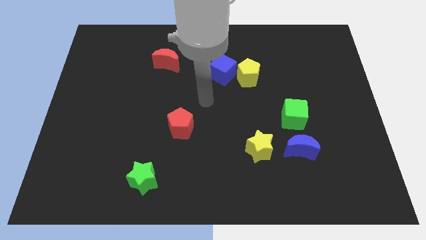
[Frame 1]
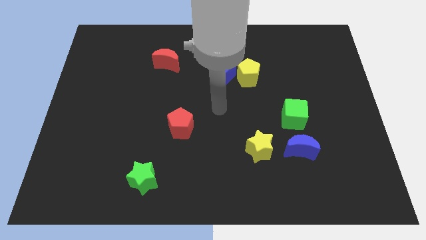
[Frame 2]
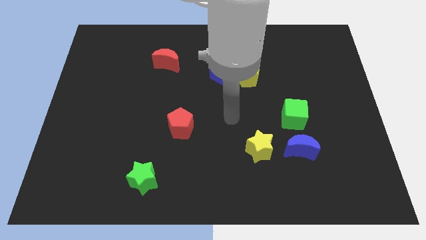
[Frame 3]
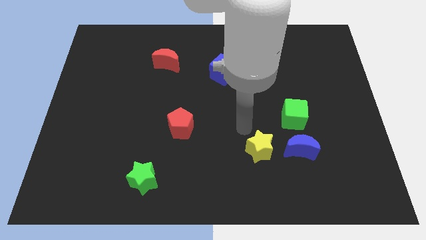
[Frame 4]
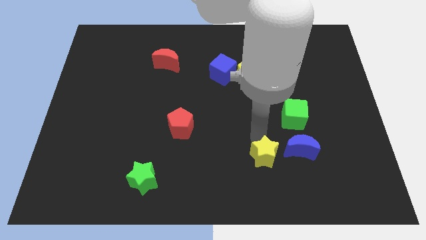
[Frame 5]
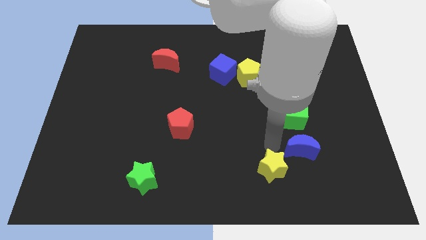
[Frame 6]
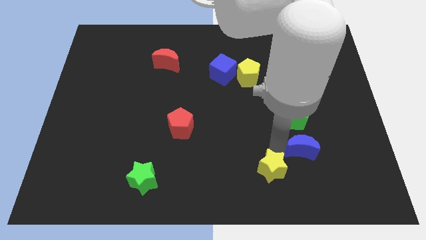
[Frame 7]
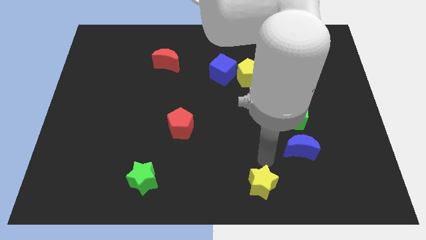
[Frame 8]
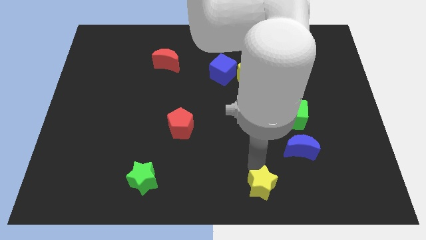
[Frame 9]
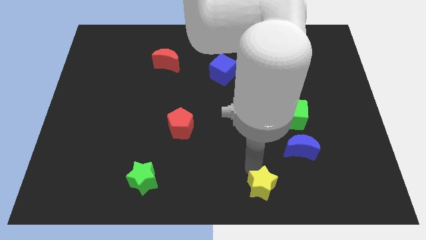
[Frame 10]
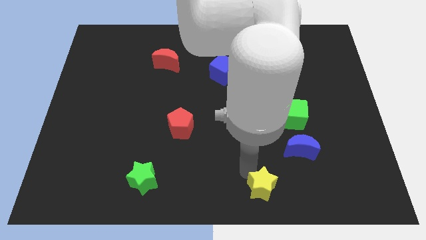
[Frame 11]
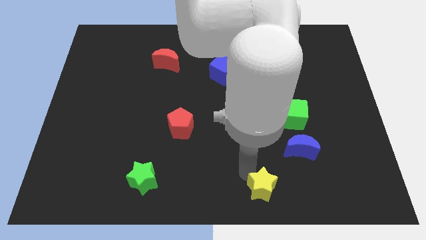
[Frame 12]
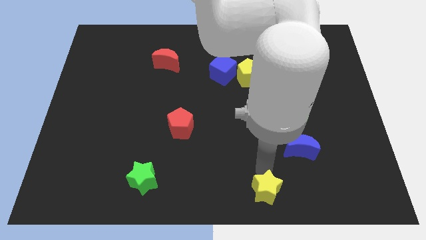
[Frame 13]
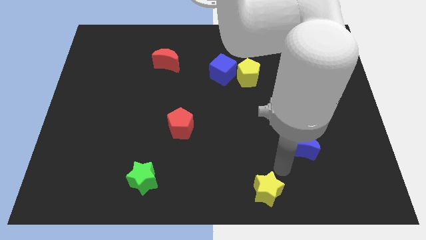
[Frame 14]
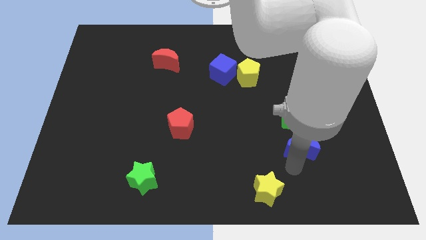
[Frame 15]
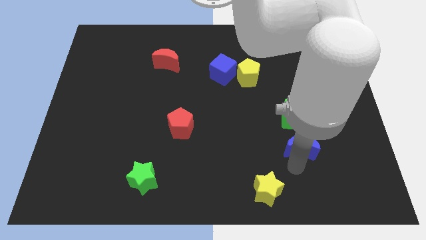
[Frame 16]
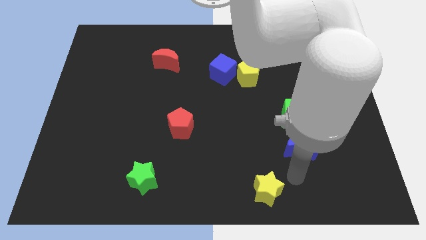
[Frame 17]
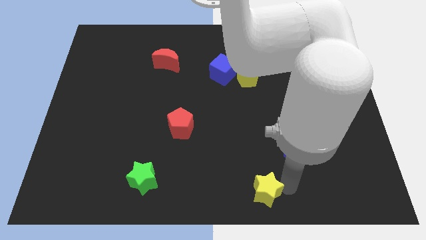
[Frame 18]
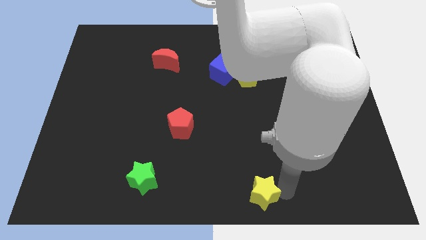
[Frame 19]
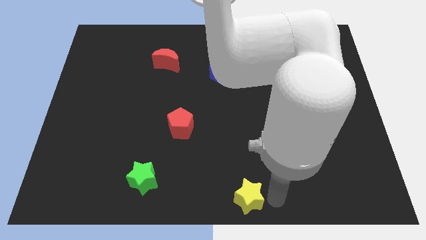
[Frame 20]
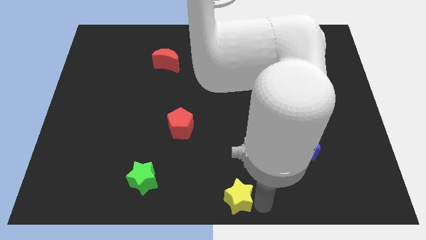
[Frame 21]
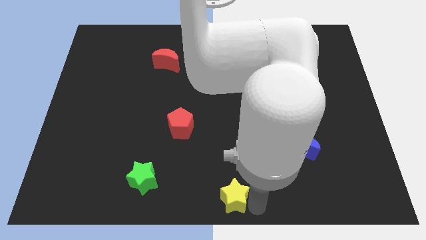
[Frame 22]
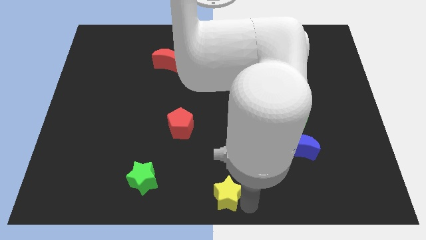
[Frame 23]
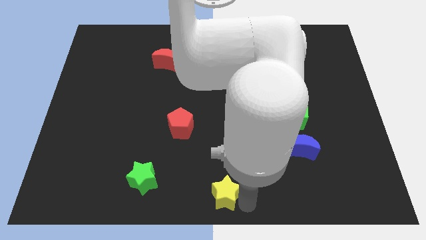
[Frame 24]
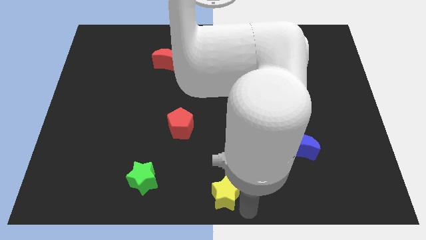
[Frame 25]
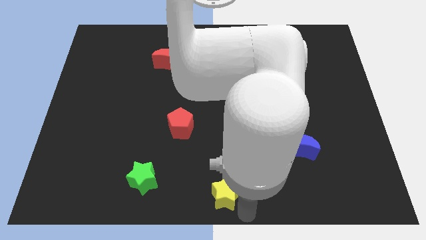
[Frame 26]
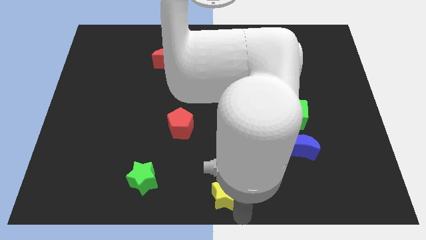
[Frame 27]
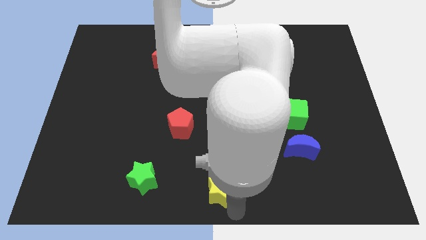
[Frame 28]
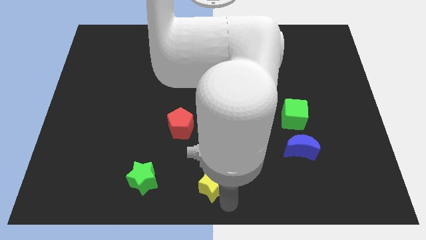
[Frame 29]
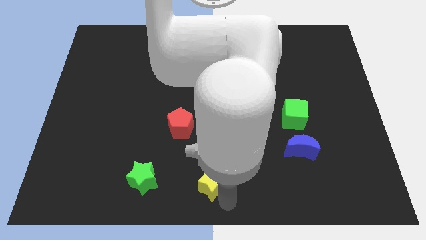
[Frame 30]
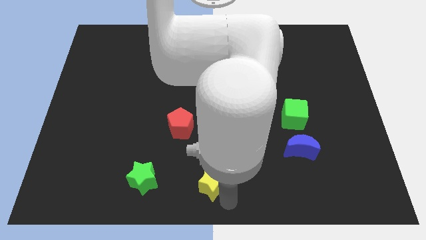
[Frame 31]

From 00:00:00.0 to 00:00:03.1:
put the yellow star parallel right side to the green star

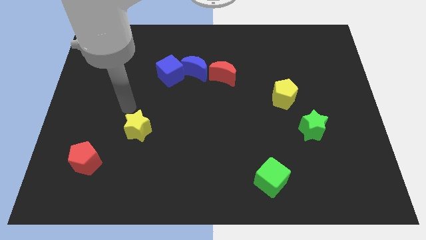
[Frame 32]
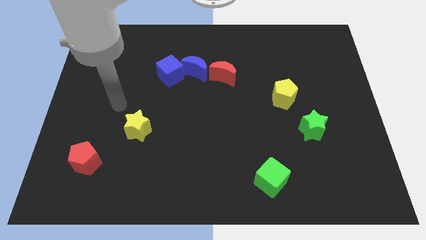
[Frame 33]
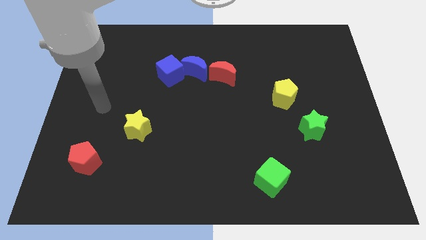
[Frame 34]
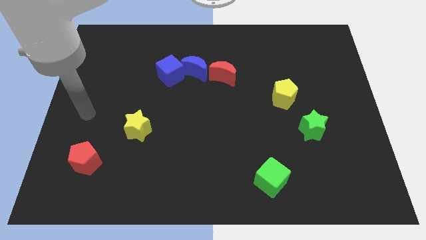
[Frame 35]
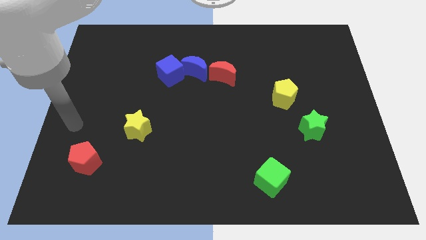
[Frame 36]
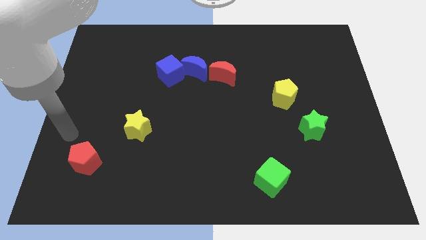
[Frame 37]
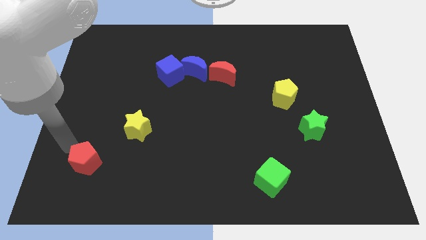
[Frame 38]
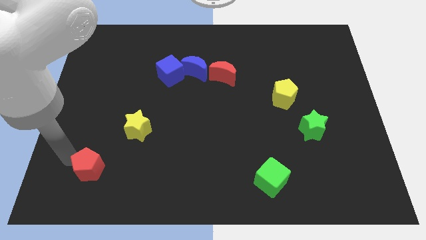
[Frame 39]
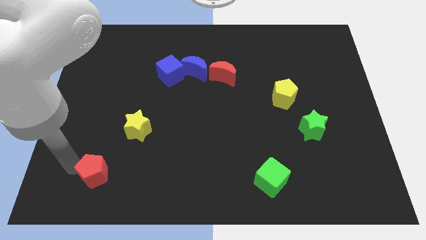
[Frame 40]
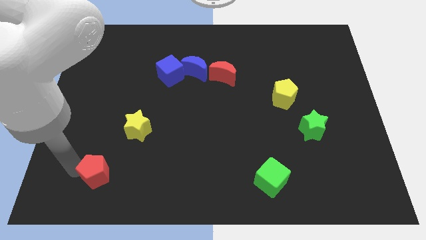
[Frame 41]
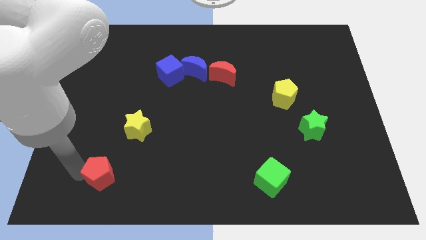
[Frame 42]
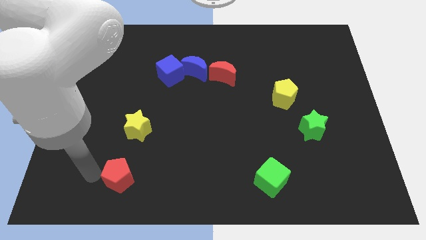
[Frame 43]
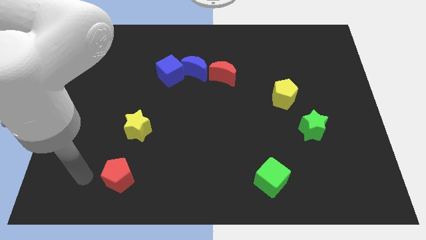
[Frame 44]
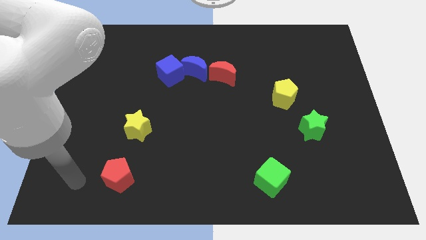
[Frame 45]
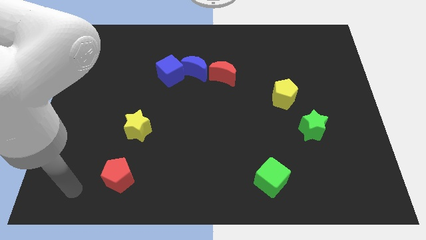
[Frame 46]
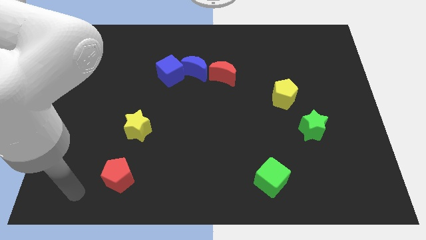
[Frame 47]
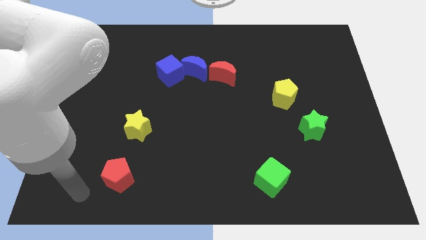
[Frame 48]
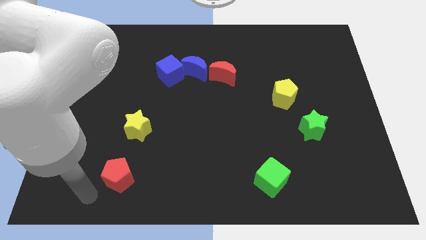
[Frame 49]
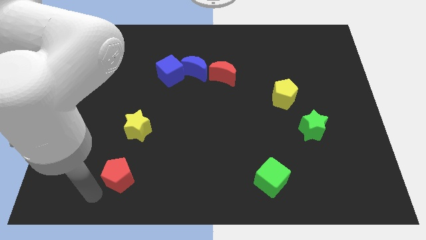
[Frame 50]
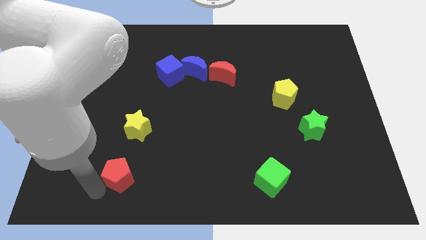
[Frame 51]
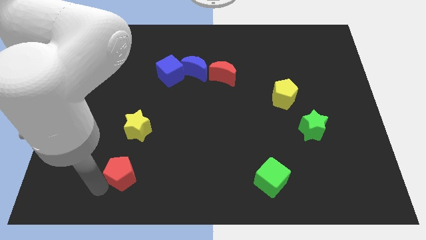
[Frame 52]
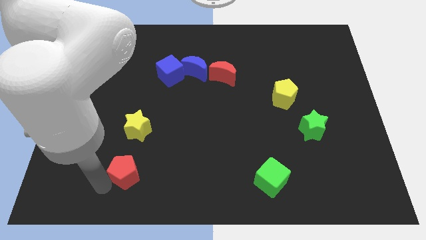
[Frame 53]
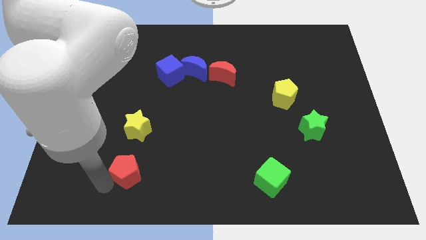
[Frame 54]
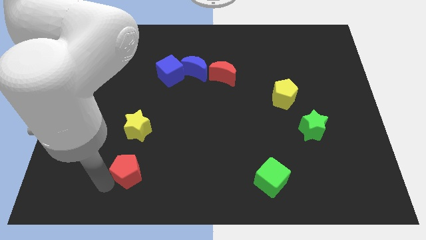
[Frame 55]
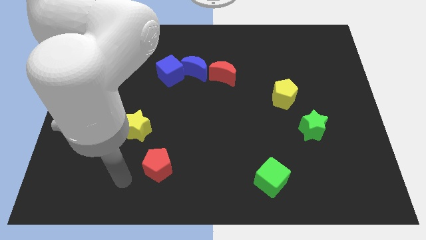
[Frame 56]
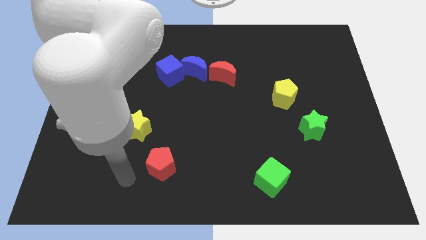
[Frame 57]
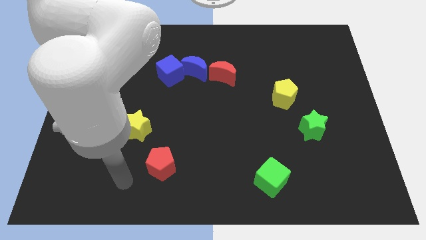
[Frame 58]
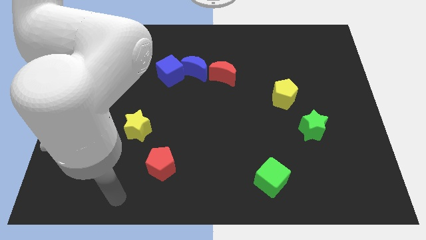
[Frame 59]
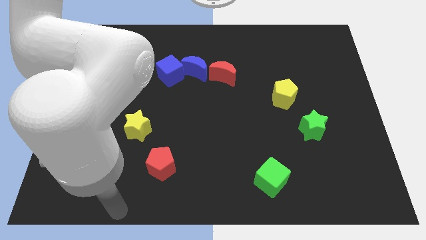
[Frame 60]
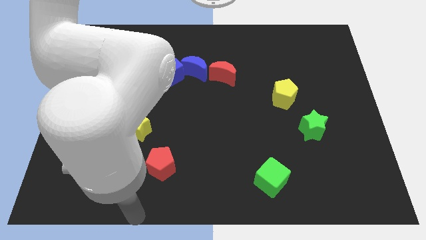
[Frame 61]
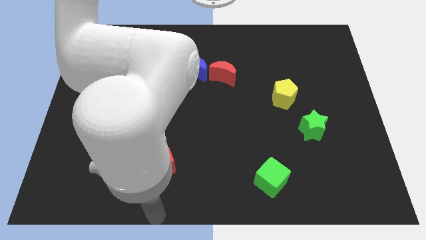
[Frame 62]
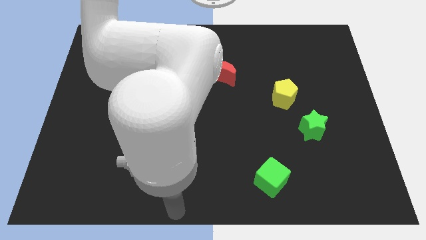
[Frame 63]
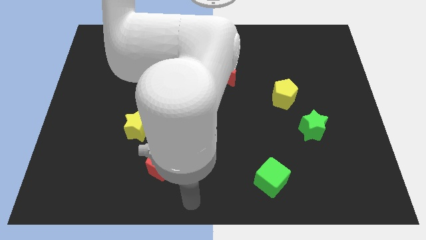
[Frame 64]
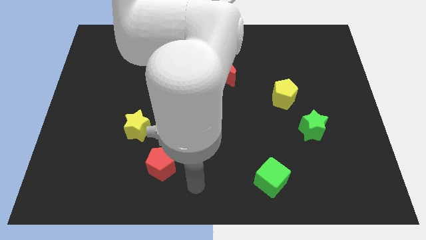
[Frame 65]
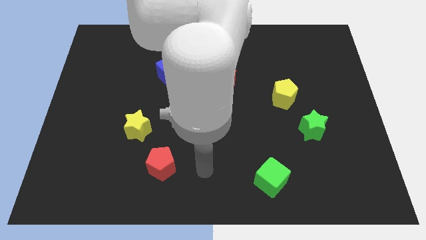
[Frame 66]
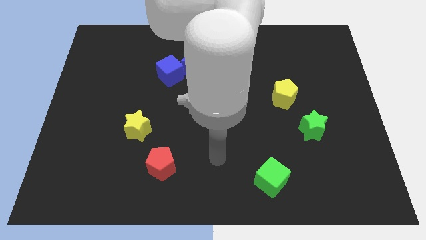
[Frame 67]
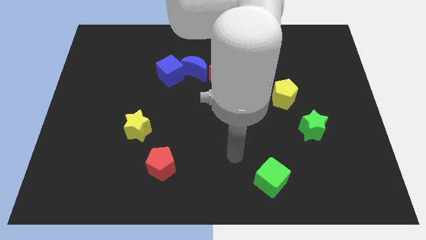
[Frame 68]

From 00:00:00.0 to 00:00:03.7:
put the red pentagon diagonally to yellow star

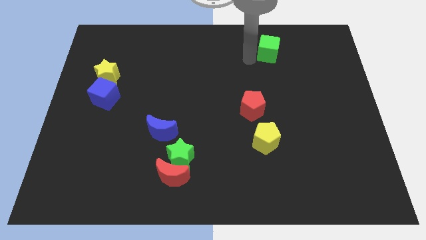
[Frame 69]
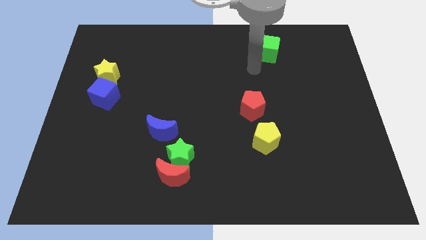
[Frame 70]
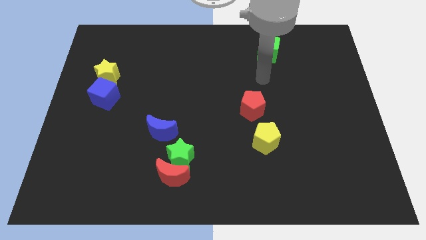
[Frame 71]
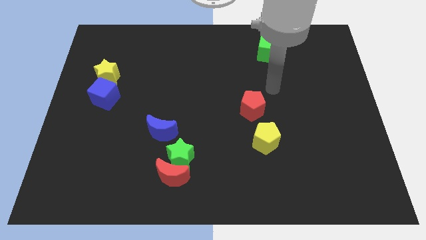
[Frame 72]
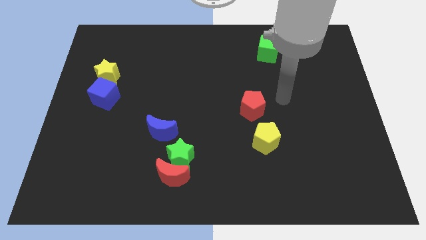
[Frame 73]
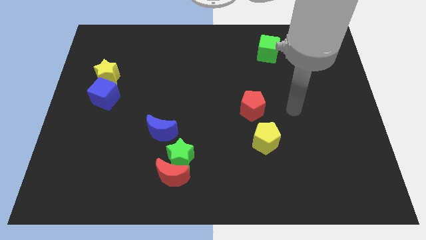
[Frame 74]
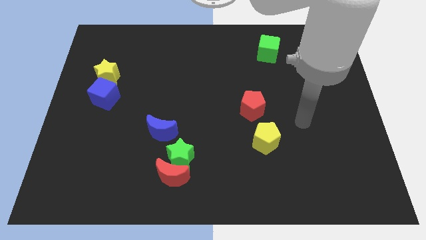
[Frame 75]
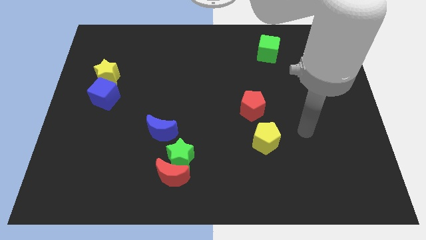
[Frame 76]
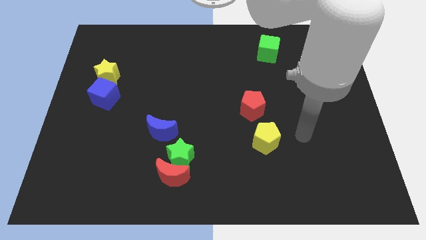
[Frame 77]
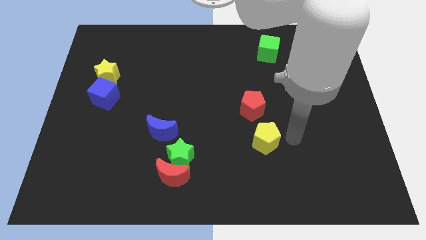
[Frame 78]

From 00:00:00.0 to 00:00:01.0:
move your arm away from the green cube

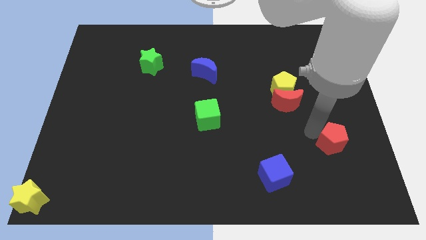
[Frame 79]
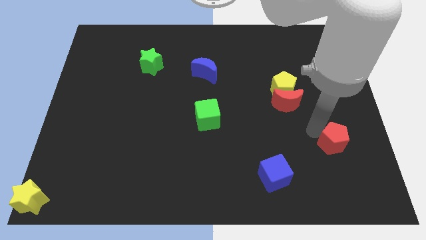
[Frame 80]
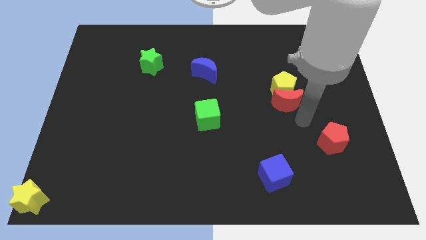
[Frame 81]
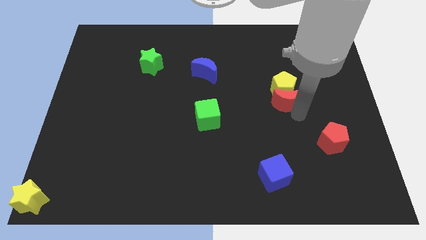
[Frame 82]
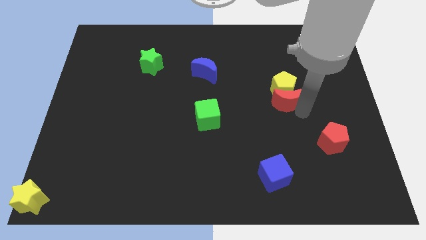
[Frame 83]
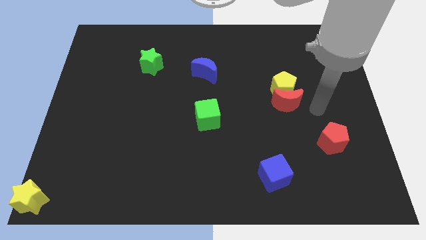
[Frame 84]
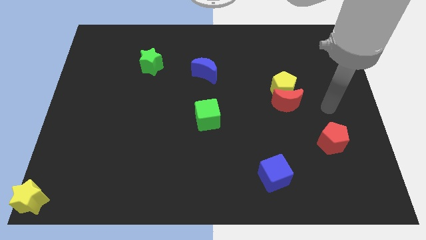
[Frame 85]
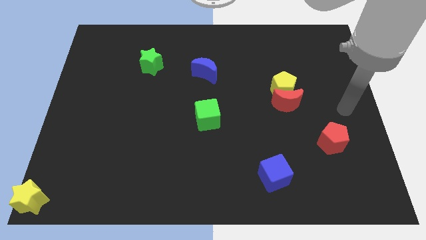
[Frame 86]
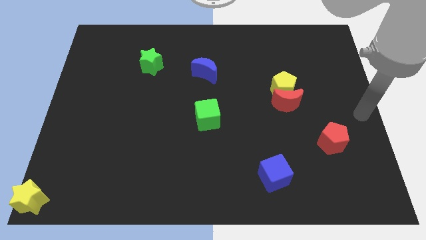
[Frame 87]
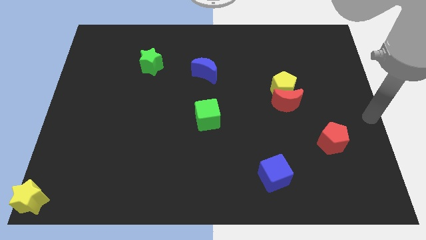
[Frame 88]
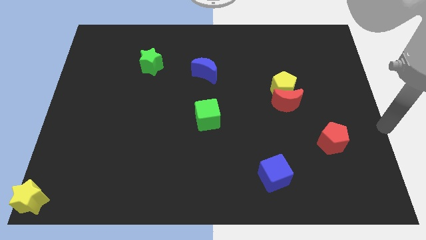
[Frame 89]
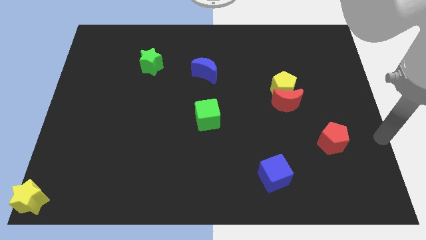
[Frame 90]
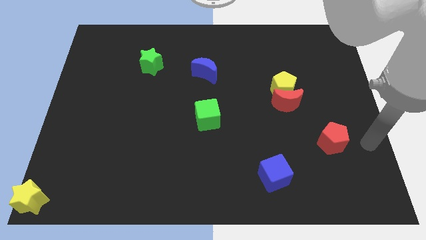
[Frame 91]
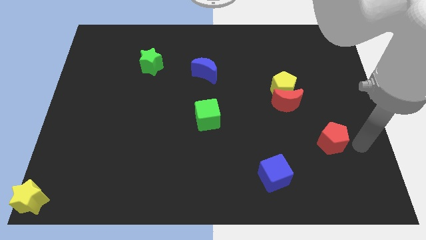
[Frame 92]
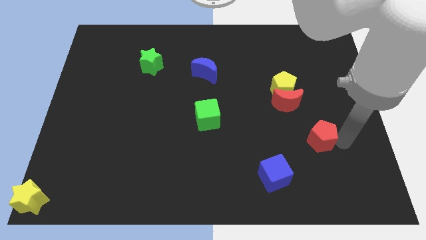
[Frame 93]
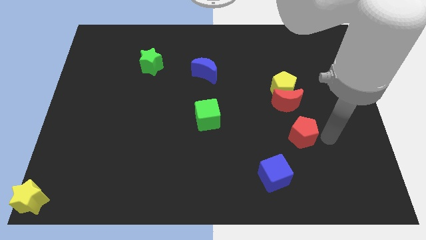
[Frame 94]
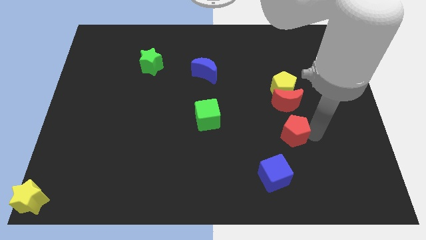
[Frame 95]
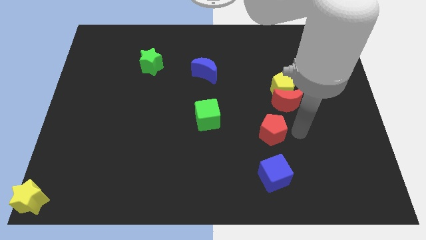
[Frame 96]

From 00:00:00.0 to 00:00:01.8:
move the red pentagon above the blue cube
